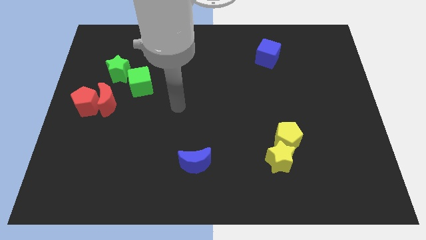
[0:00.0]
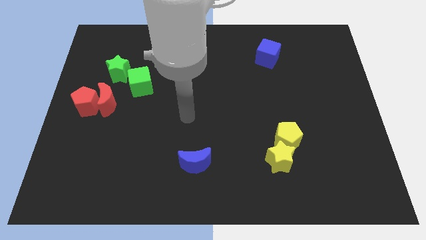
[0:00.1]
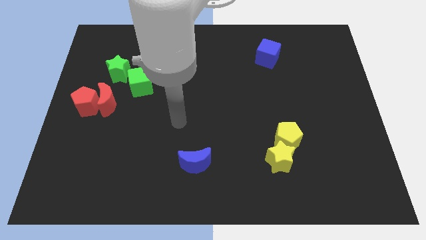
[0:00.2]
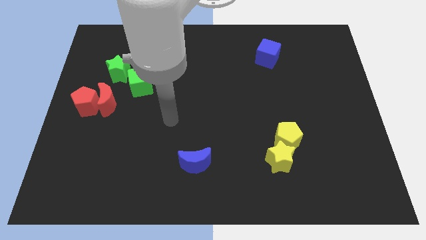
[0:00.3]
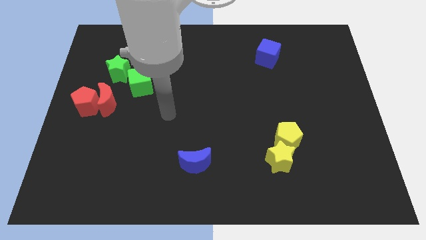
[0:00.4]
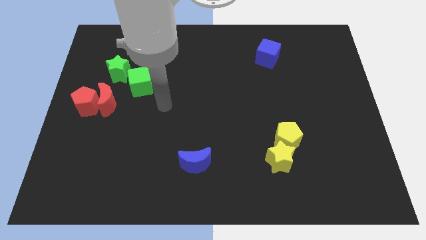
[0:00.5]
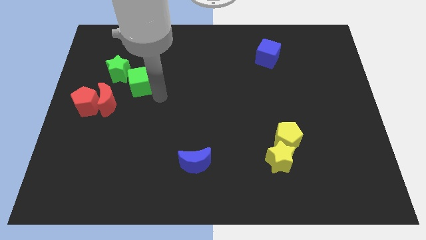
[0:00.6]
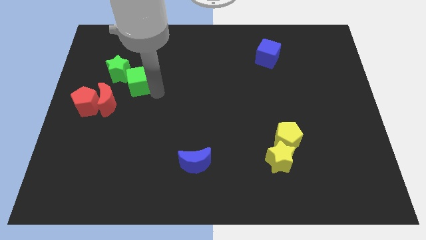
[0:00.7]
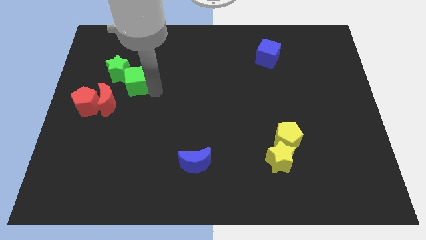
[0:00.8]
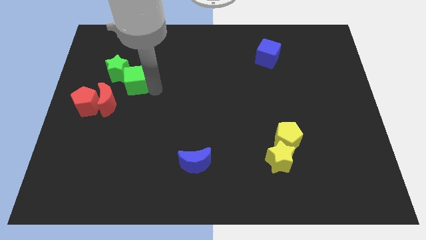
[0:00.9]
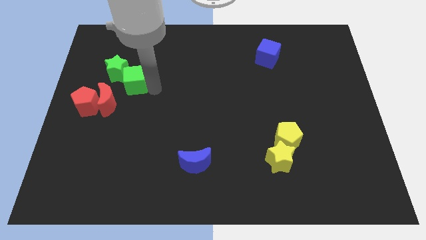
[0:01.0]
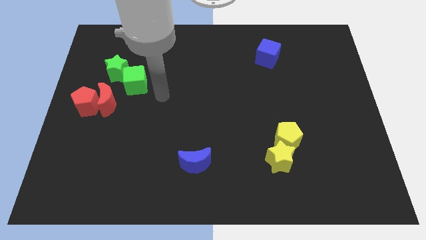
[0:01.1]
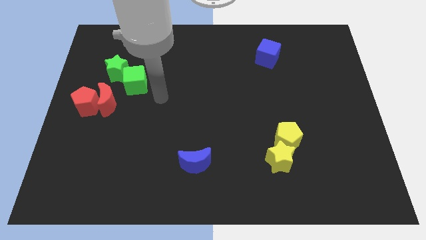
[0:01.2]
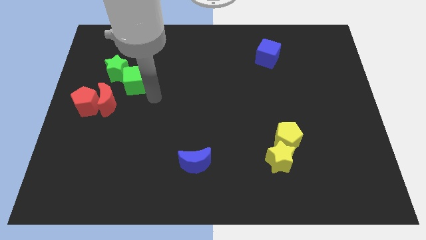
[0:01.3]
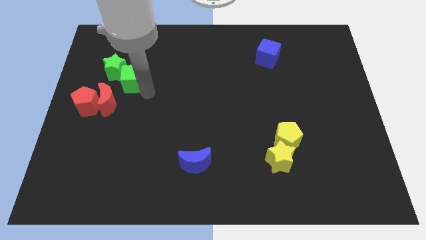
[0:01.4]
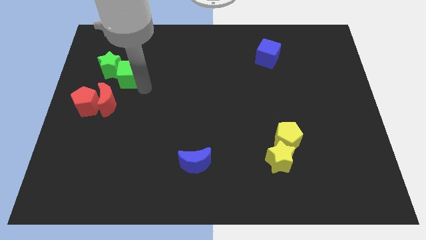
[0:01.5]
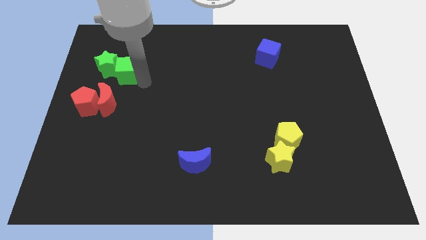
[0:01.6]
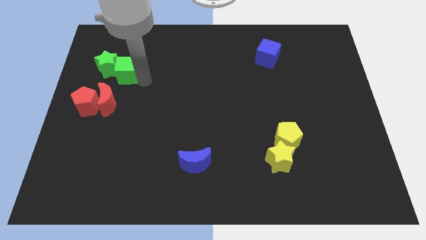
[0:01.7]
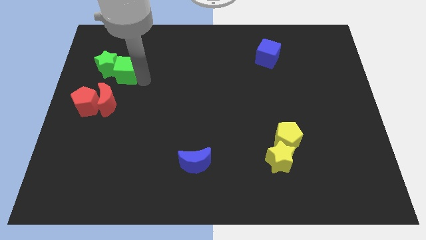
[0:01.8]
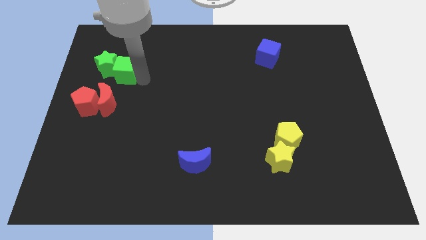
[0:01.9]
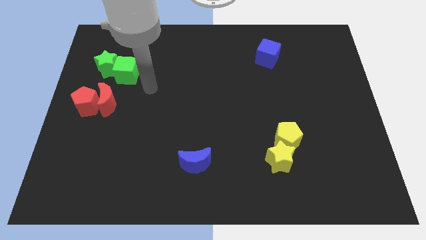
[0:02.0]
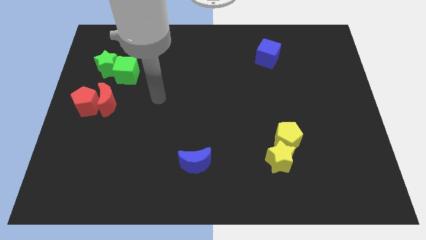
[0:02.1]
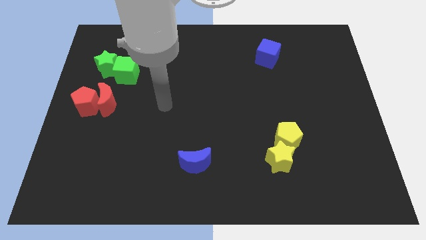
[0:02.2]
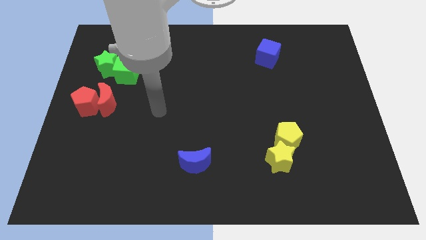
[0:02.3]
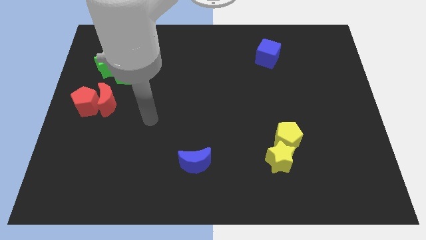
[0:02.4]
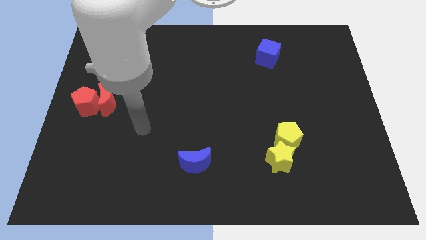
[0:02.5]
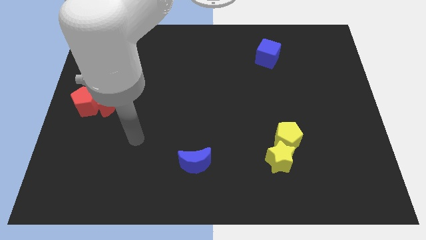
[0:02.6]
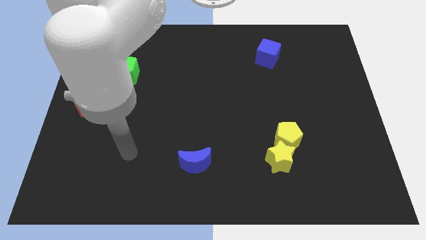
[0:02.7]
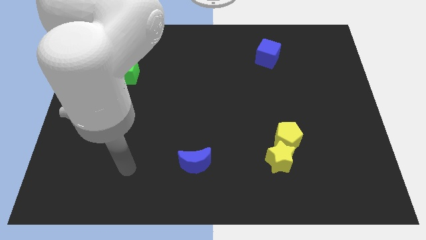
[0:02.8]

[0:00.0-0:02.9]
slightly push the green blocks to center left

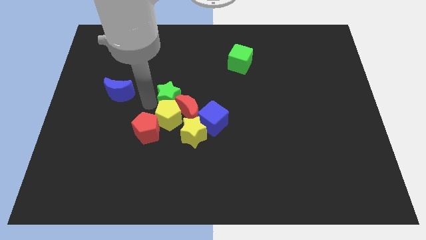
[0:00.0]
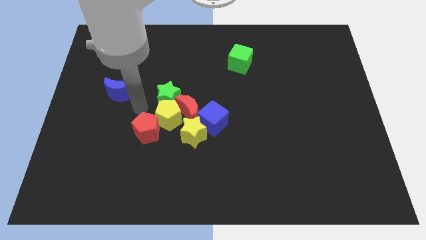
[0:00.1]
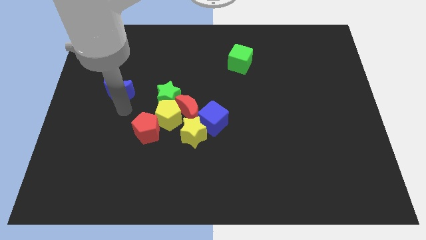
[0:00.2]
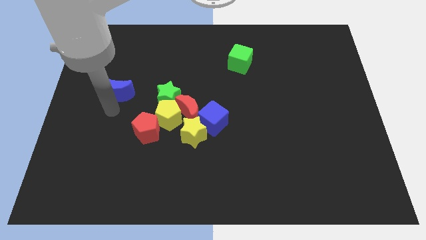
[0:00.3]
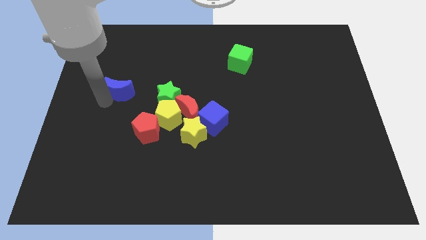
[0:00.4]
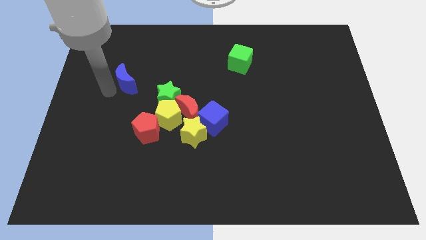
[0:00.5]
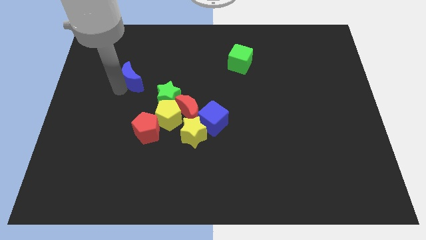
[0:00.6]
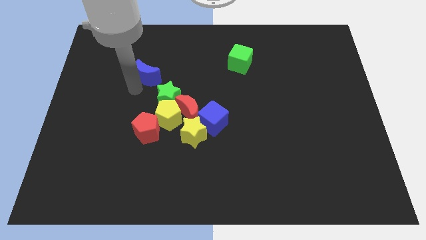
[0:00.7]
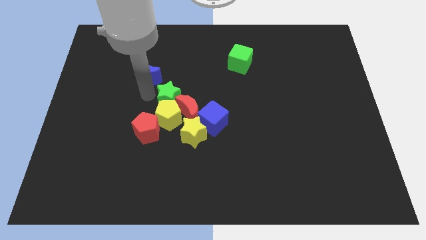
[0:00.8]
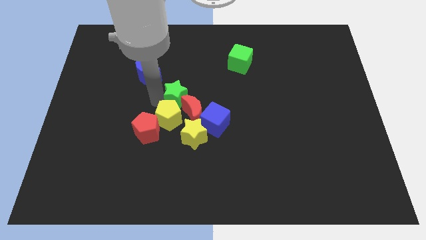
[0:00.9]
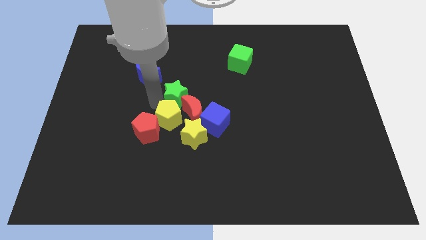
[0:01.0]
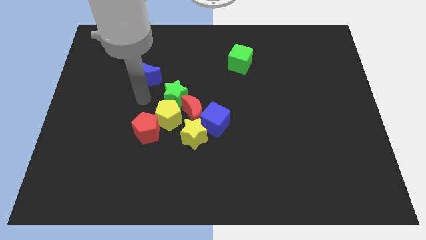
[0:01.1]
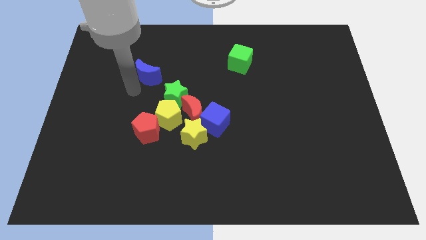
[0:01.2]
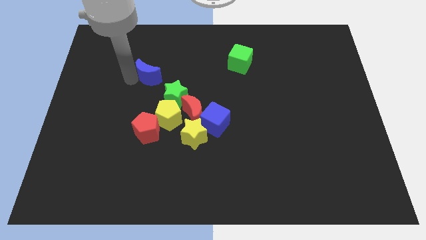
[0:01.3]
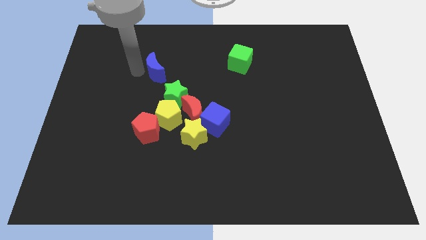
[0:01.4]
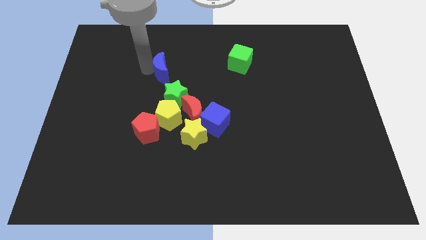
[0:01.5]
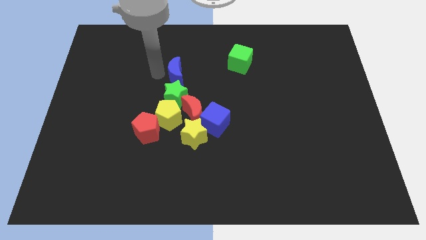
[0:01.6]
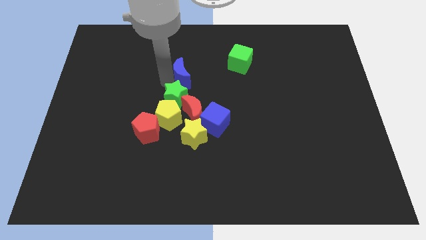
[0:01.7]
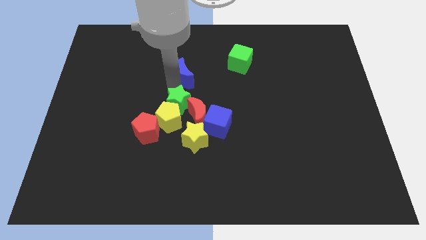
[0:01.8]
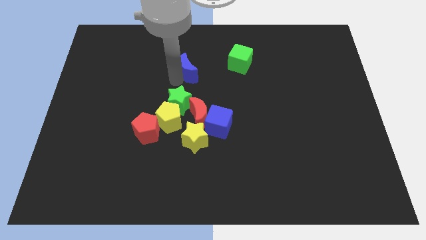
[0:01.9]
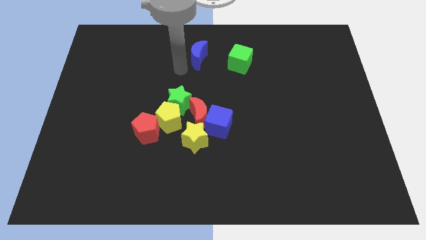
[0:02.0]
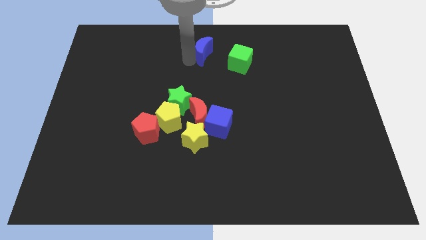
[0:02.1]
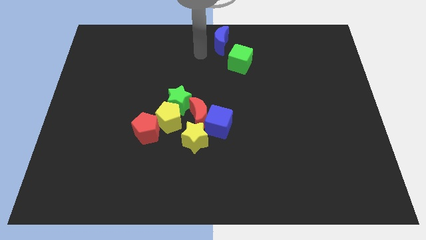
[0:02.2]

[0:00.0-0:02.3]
move the blue crescent to the top center of the board

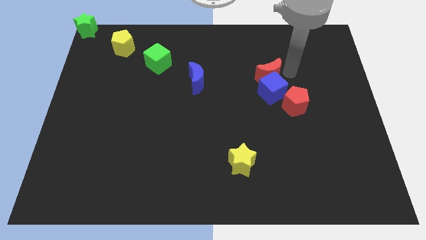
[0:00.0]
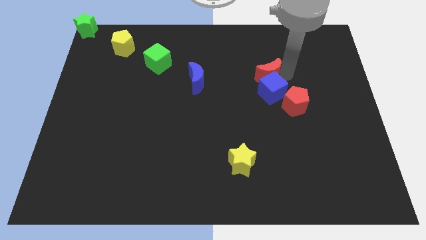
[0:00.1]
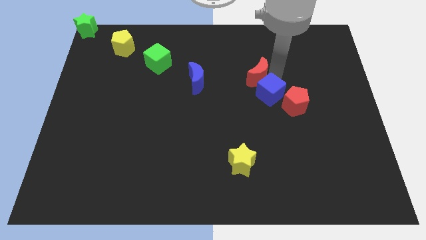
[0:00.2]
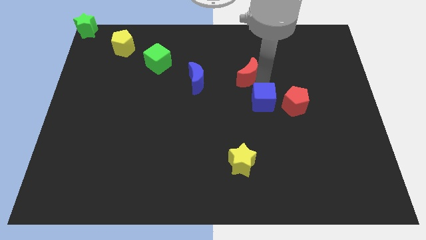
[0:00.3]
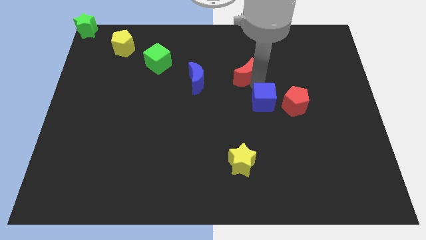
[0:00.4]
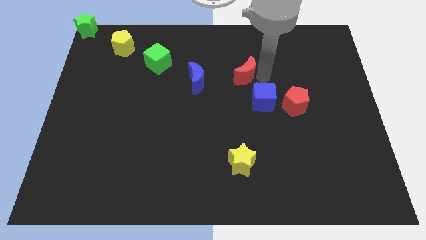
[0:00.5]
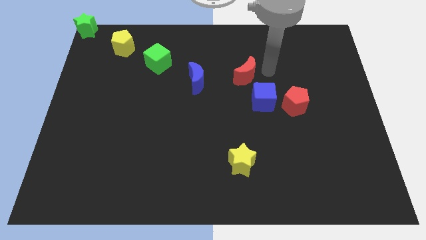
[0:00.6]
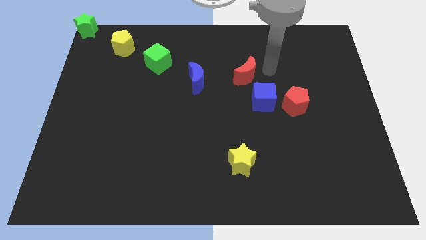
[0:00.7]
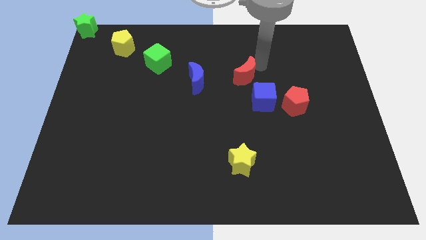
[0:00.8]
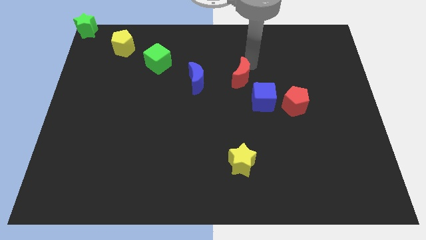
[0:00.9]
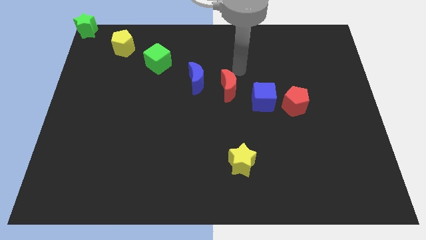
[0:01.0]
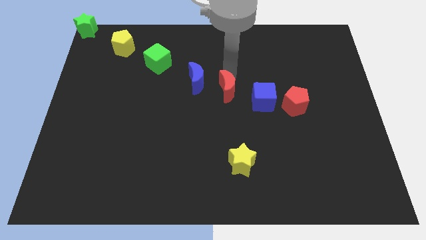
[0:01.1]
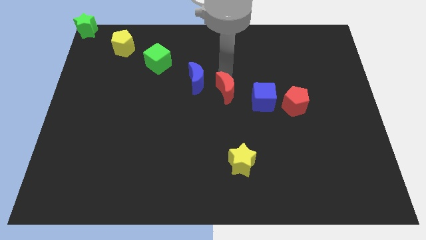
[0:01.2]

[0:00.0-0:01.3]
separate the red moon from the blue cube

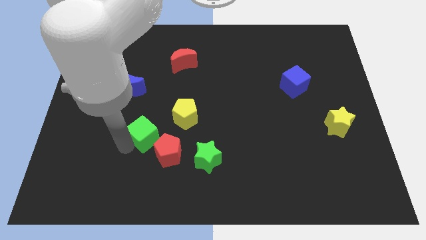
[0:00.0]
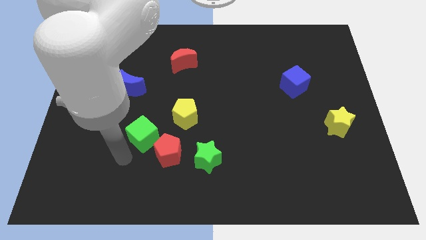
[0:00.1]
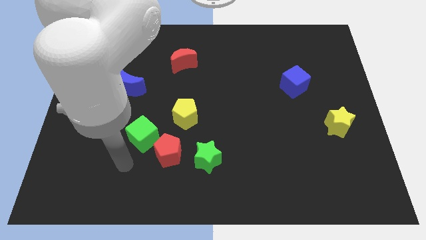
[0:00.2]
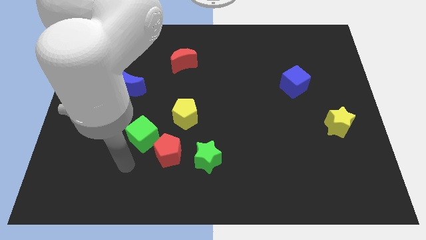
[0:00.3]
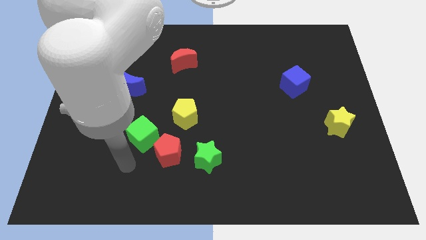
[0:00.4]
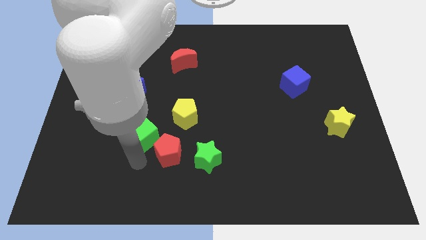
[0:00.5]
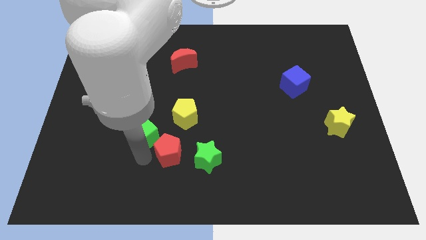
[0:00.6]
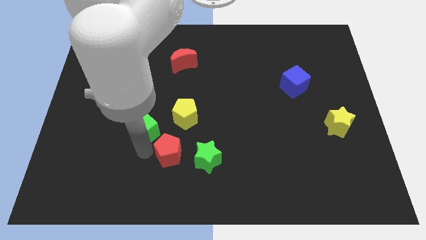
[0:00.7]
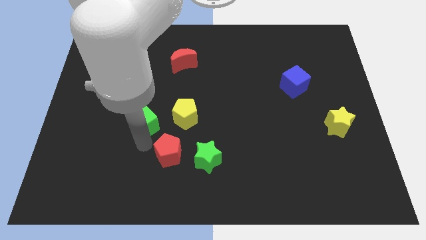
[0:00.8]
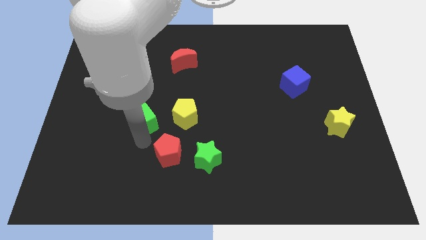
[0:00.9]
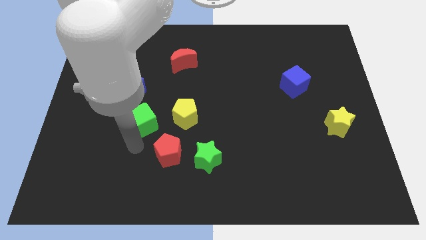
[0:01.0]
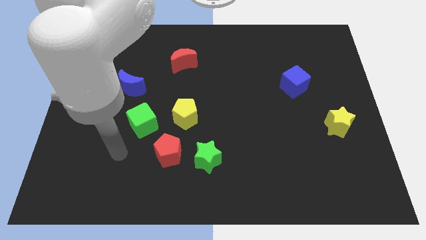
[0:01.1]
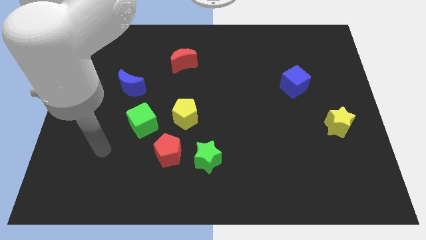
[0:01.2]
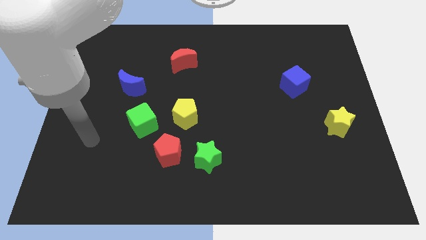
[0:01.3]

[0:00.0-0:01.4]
slide the green cube slightly upwards

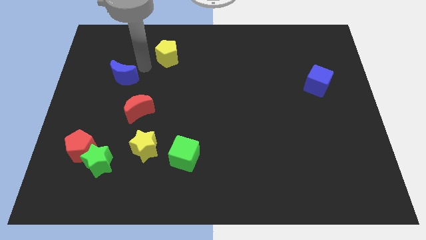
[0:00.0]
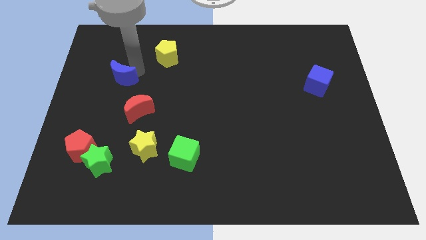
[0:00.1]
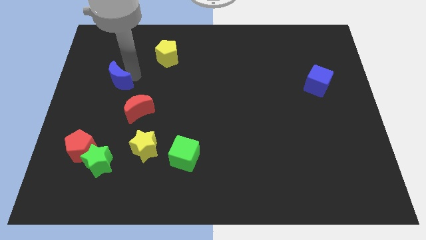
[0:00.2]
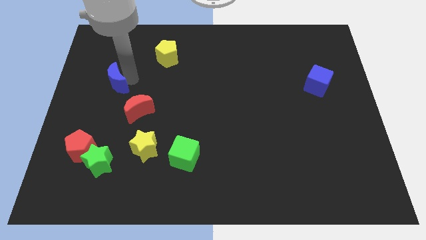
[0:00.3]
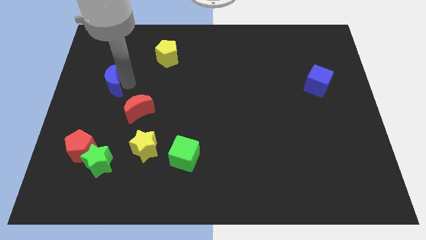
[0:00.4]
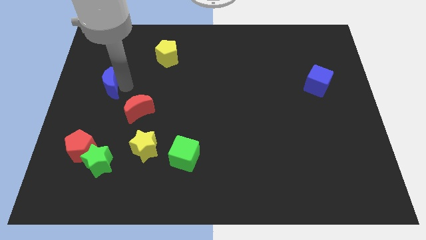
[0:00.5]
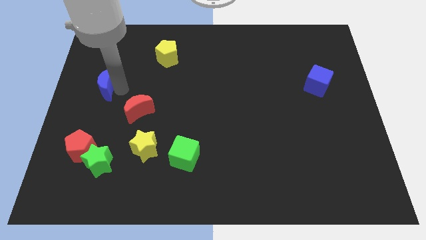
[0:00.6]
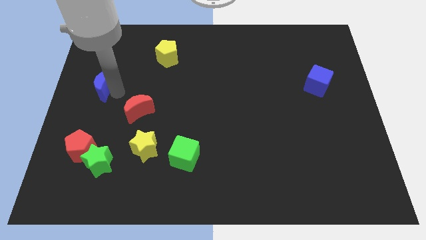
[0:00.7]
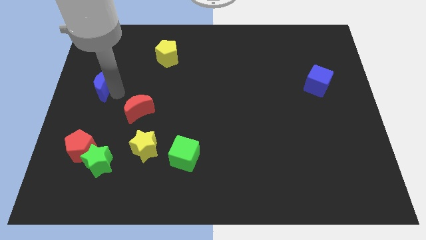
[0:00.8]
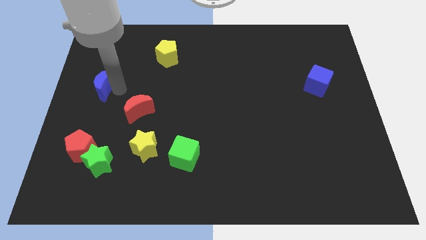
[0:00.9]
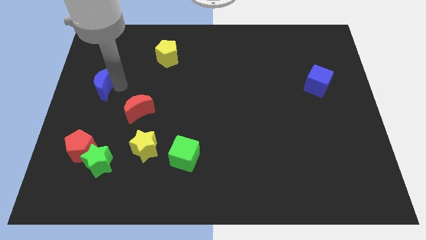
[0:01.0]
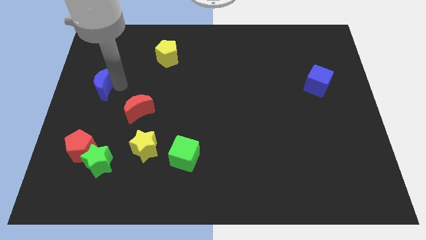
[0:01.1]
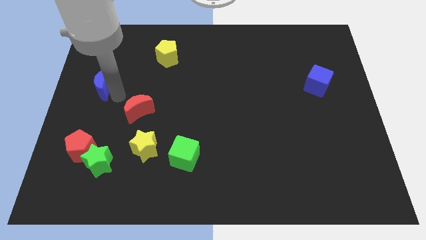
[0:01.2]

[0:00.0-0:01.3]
place blue moon to the top left corner of the red moon
